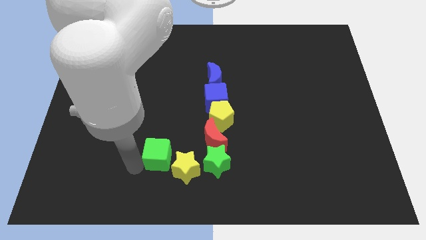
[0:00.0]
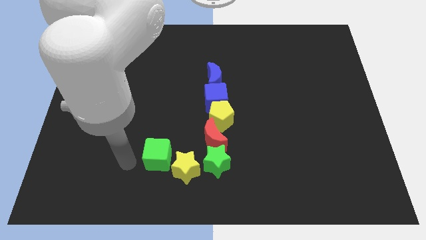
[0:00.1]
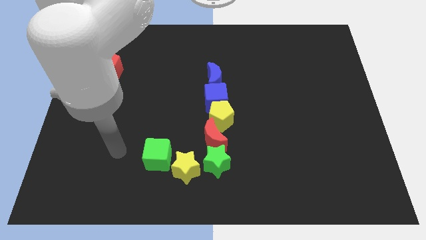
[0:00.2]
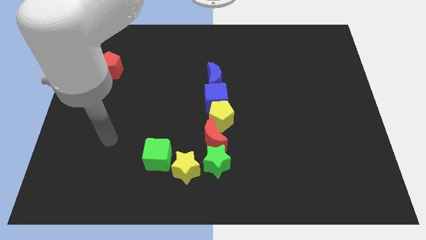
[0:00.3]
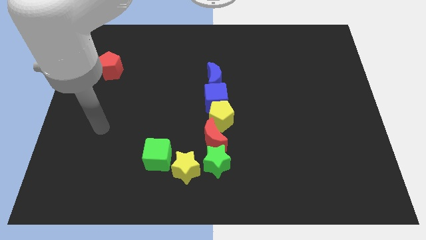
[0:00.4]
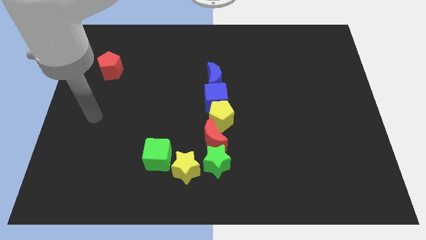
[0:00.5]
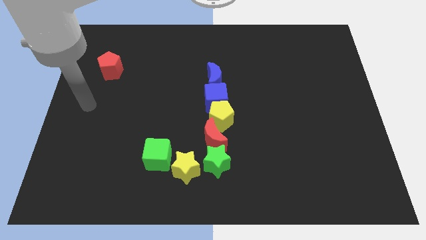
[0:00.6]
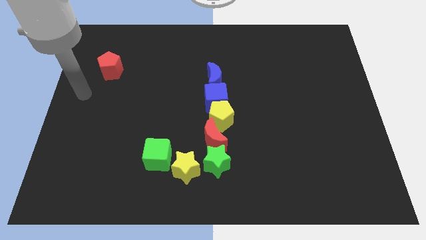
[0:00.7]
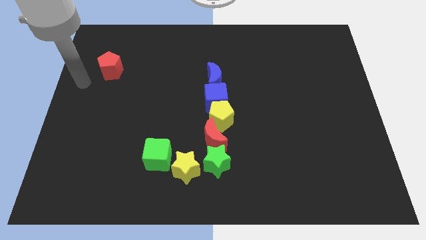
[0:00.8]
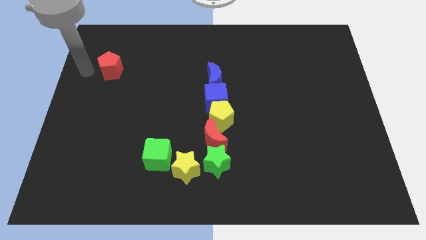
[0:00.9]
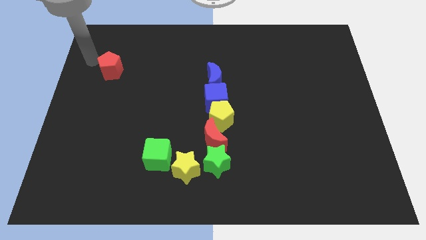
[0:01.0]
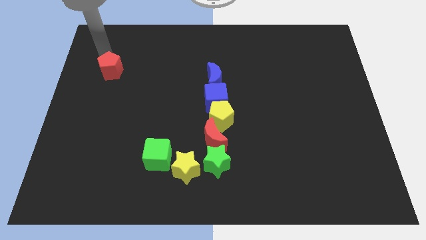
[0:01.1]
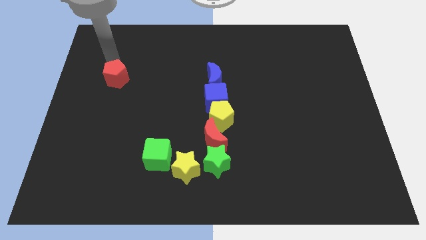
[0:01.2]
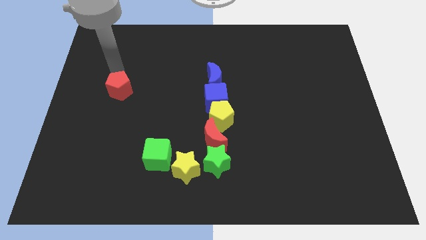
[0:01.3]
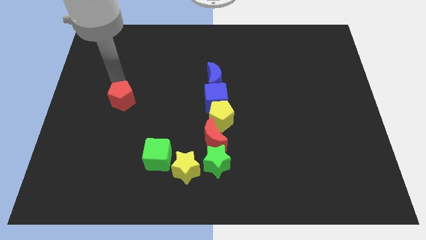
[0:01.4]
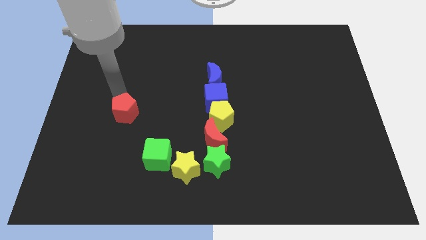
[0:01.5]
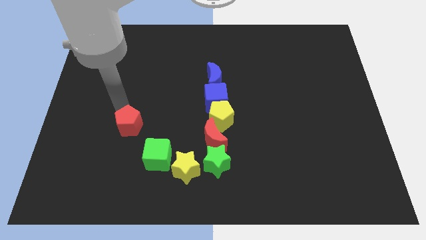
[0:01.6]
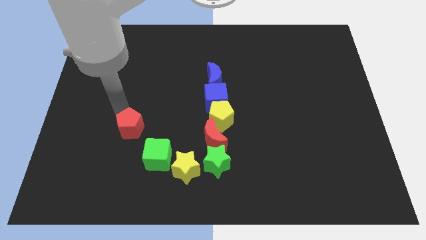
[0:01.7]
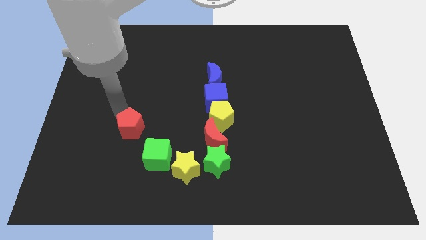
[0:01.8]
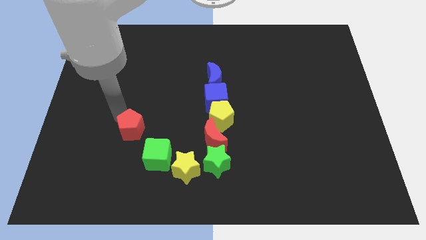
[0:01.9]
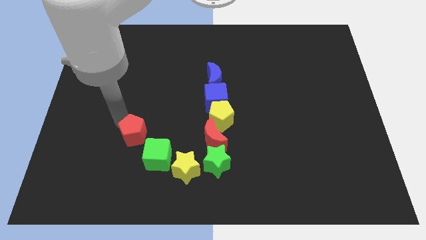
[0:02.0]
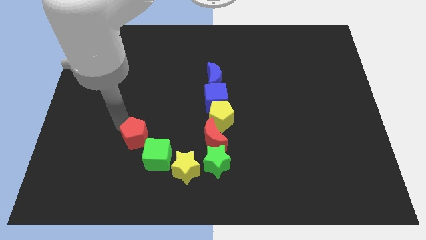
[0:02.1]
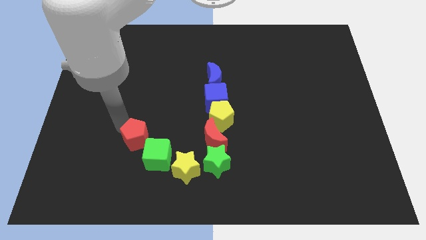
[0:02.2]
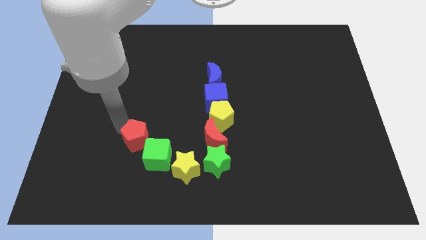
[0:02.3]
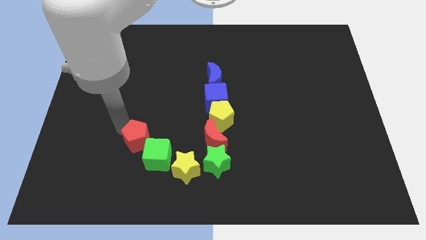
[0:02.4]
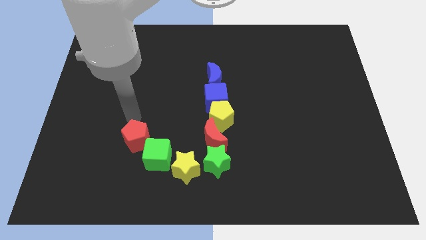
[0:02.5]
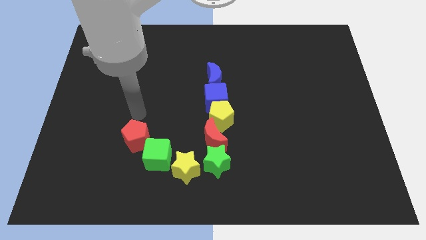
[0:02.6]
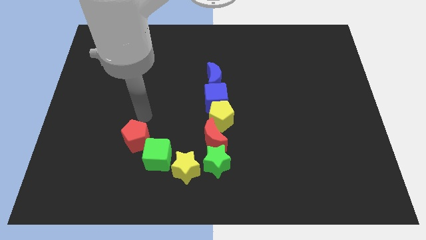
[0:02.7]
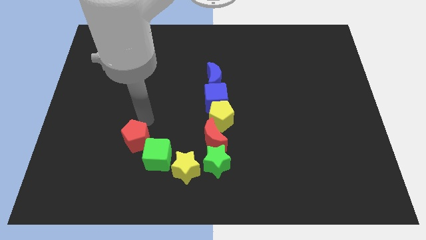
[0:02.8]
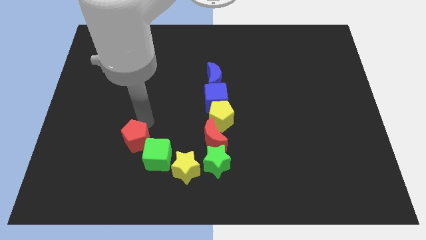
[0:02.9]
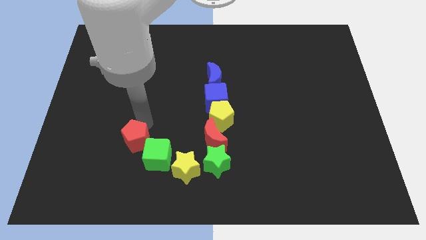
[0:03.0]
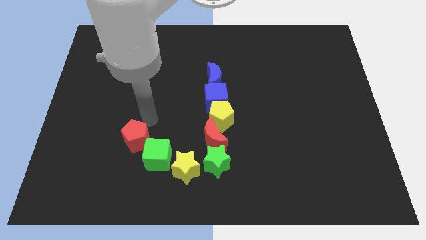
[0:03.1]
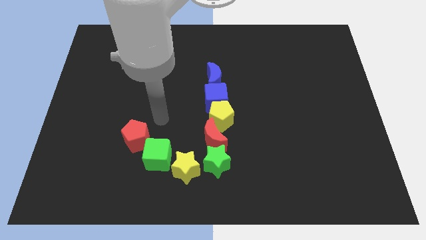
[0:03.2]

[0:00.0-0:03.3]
push the red pentagon towards green cube

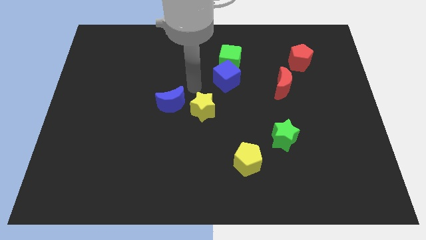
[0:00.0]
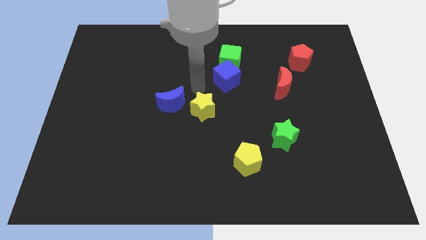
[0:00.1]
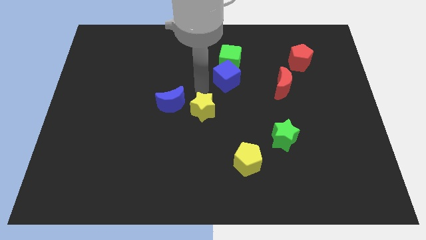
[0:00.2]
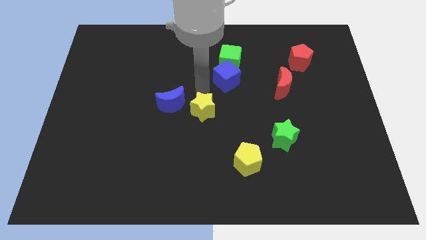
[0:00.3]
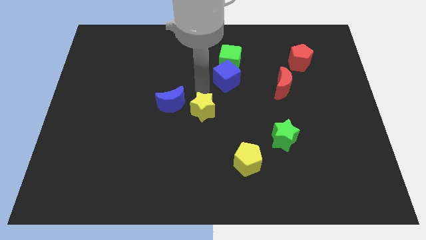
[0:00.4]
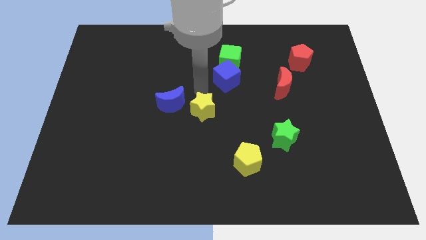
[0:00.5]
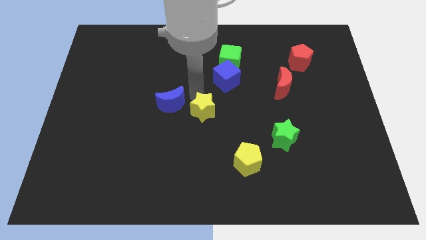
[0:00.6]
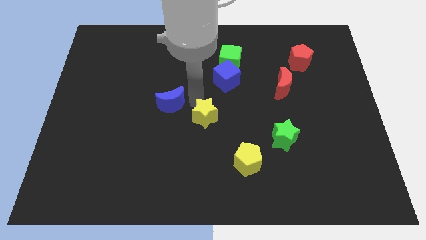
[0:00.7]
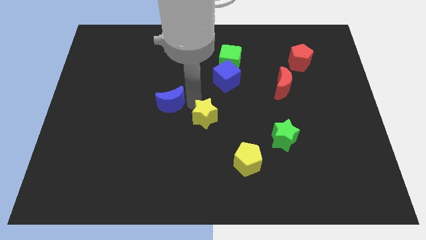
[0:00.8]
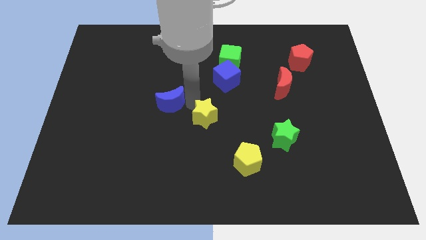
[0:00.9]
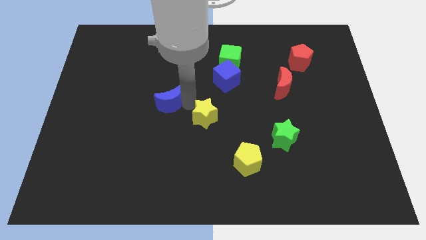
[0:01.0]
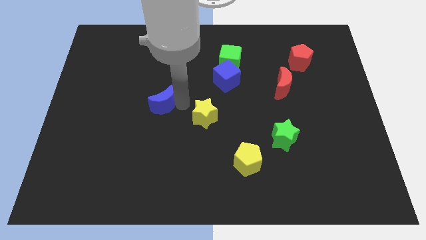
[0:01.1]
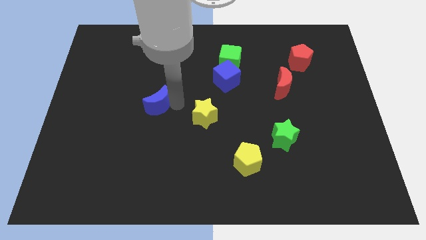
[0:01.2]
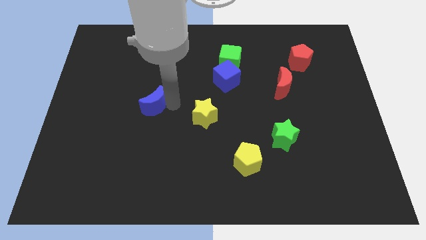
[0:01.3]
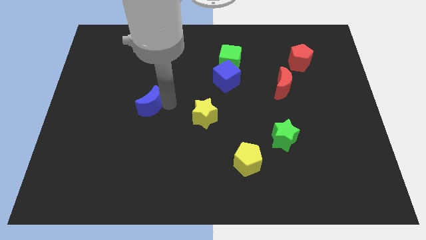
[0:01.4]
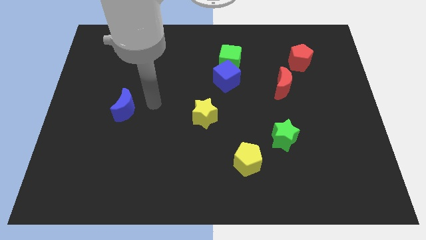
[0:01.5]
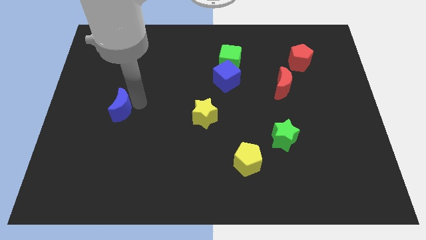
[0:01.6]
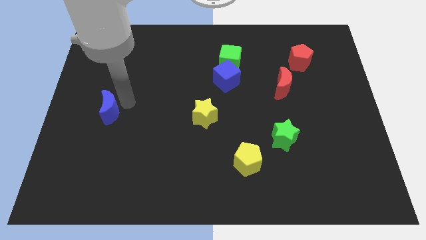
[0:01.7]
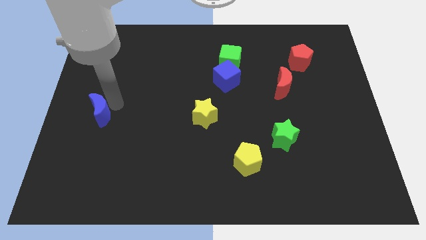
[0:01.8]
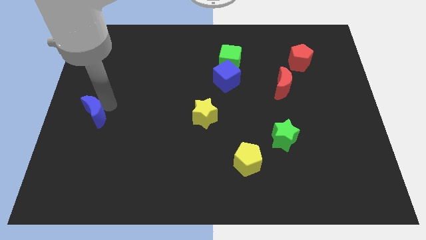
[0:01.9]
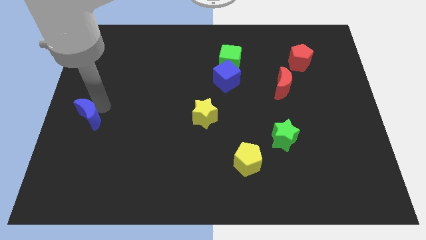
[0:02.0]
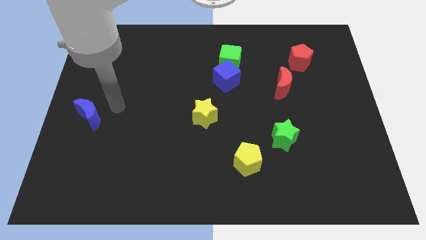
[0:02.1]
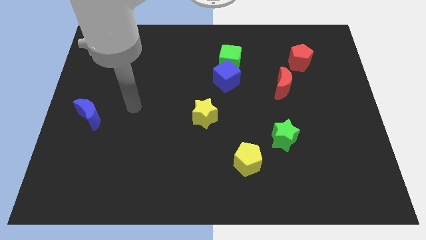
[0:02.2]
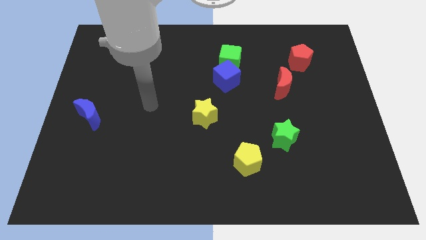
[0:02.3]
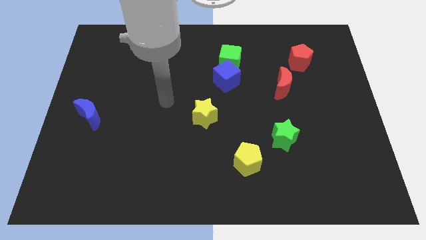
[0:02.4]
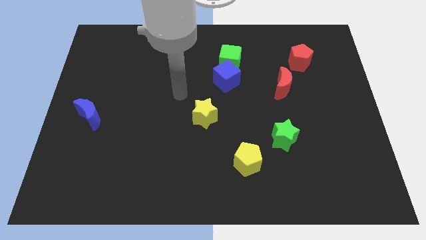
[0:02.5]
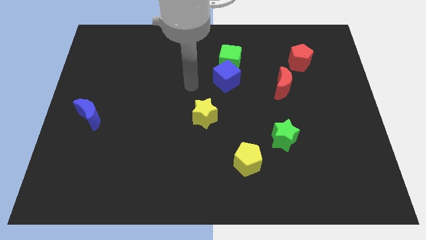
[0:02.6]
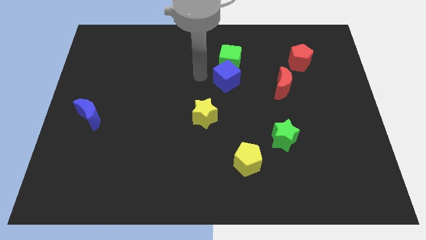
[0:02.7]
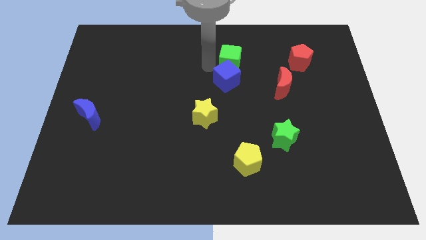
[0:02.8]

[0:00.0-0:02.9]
separate the blue moon from the yellow star

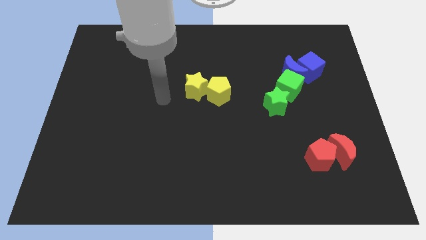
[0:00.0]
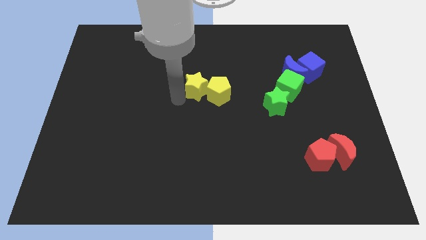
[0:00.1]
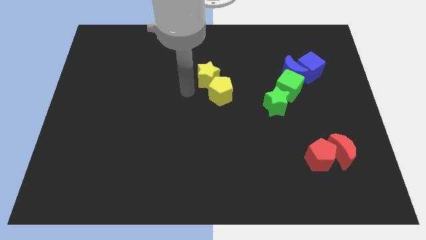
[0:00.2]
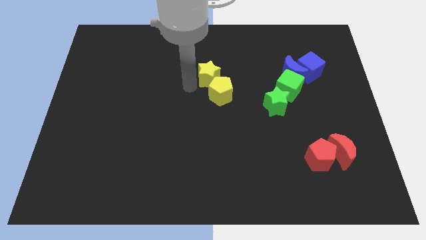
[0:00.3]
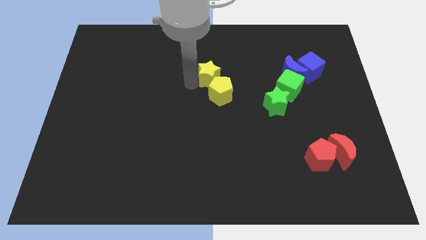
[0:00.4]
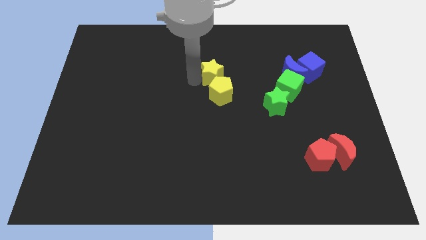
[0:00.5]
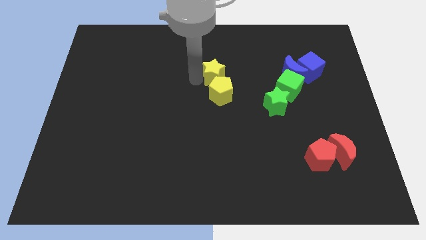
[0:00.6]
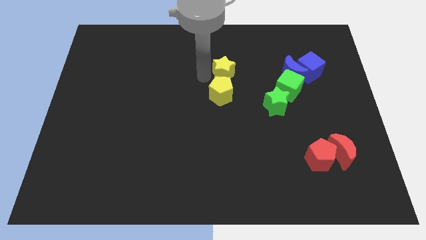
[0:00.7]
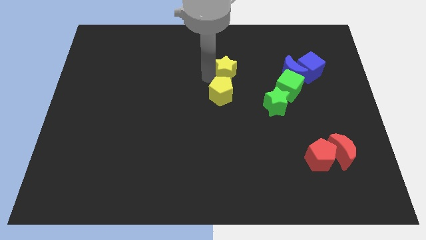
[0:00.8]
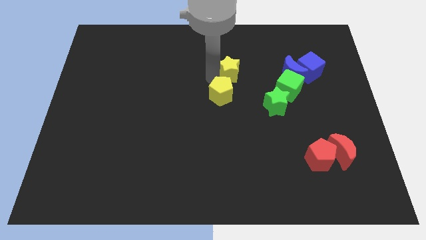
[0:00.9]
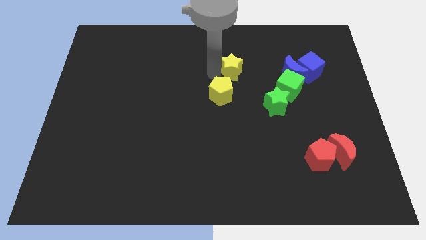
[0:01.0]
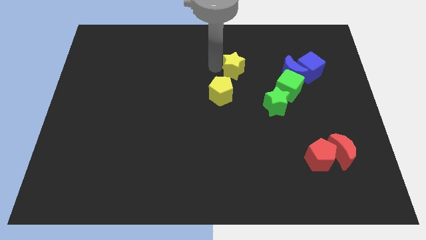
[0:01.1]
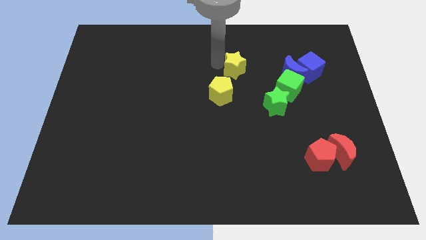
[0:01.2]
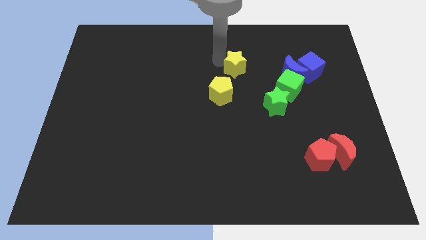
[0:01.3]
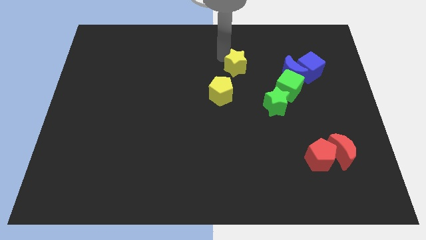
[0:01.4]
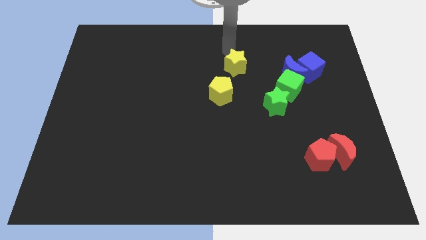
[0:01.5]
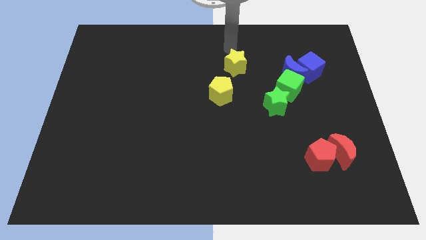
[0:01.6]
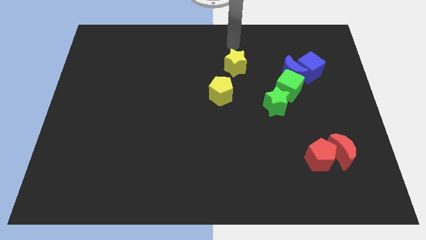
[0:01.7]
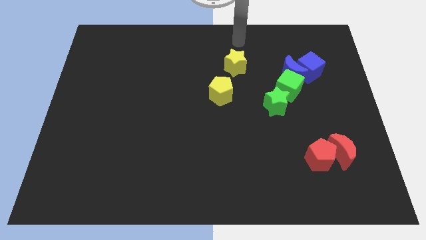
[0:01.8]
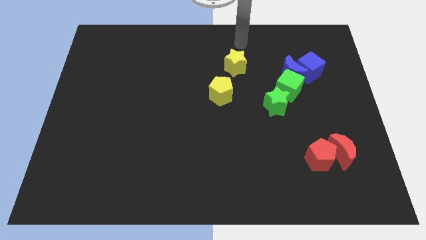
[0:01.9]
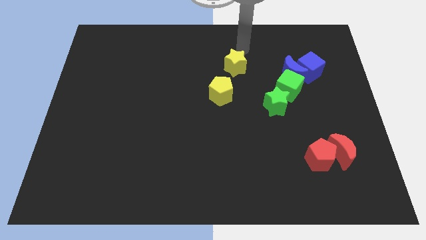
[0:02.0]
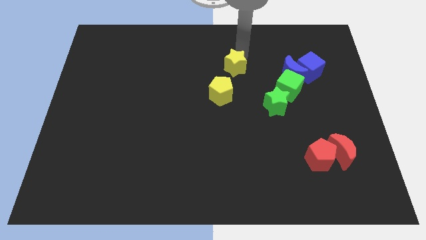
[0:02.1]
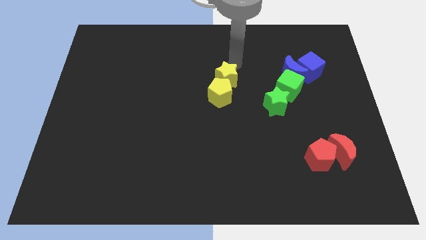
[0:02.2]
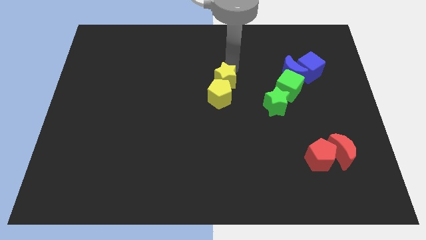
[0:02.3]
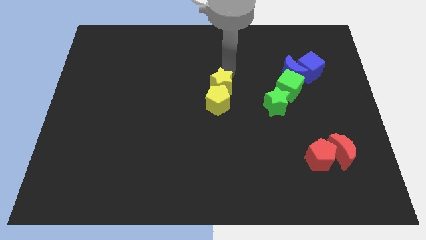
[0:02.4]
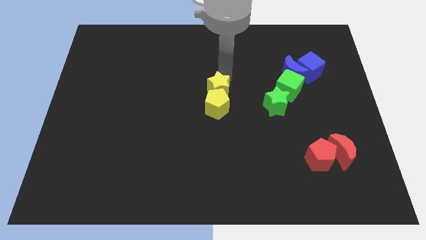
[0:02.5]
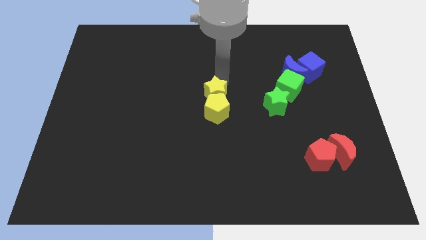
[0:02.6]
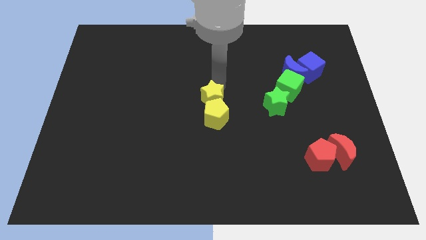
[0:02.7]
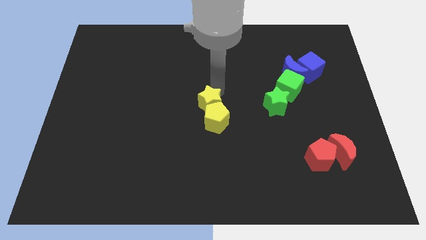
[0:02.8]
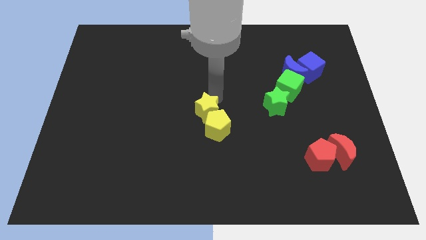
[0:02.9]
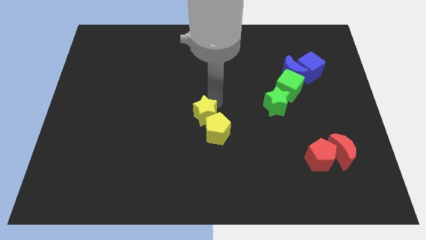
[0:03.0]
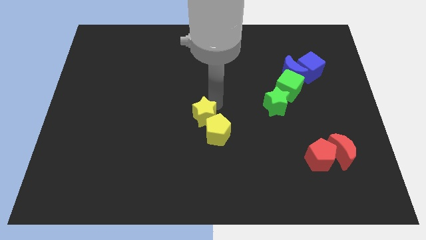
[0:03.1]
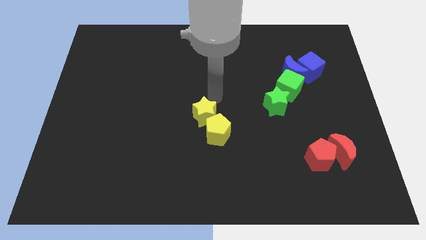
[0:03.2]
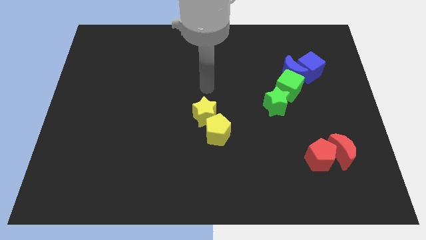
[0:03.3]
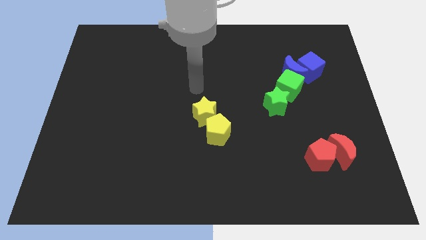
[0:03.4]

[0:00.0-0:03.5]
push the yellow star into the yellow pentagon
